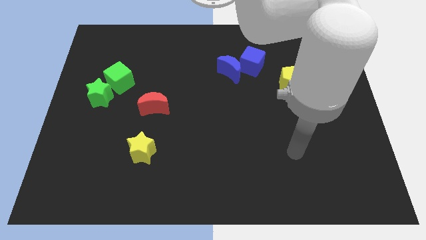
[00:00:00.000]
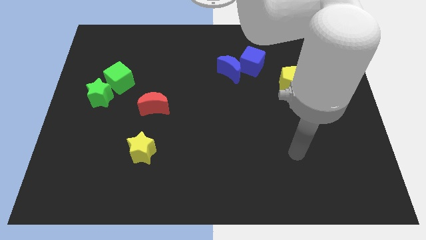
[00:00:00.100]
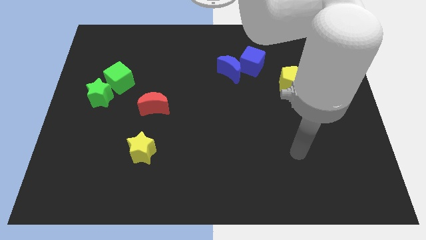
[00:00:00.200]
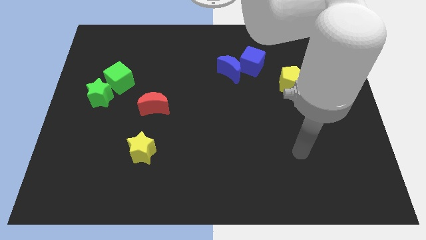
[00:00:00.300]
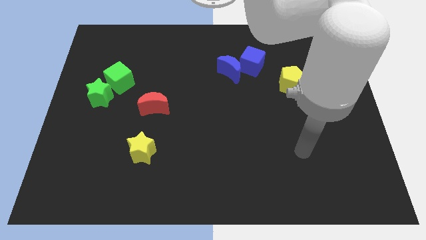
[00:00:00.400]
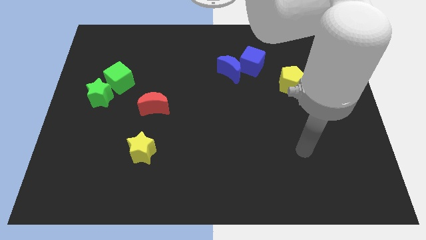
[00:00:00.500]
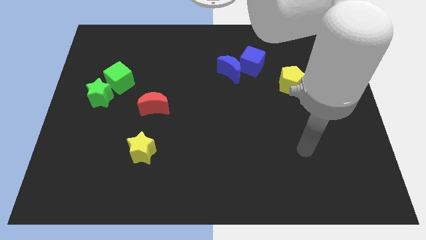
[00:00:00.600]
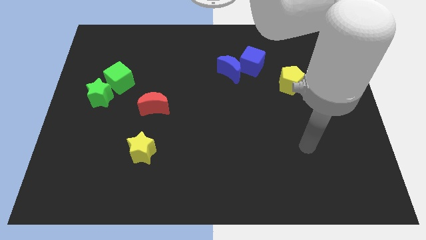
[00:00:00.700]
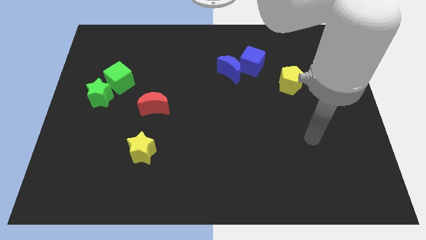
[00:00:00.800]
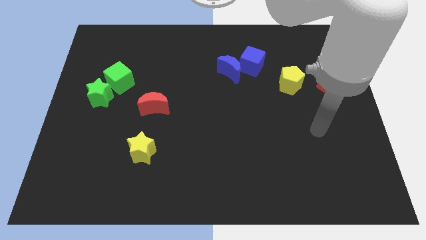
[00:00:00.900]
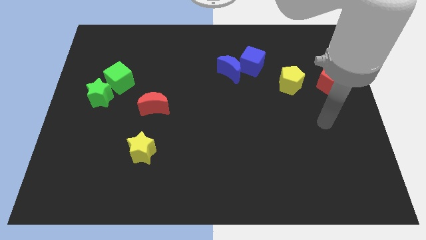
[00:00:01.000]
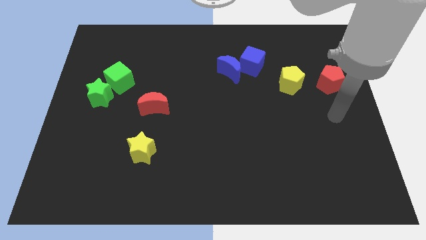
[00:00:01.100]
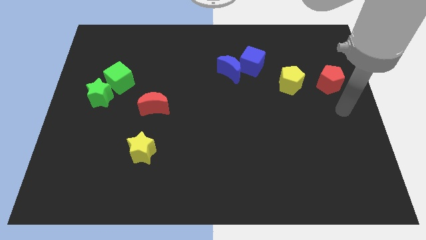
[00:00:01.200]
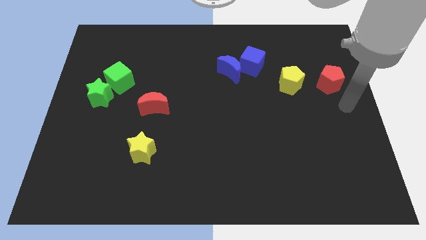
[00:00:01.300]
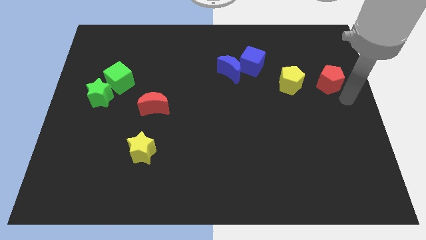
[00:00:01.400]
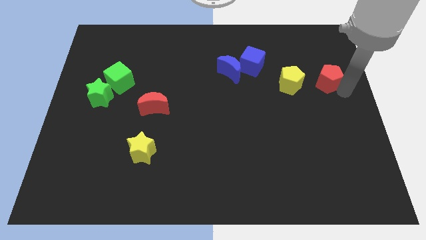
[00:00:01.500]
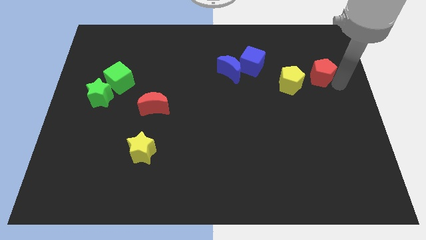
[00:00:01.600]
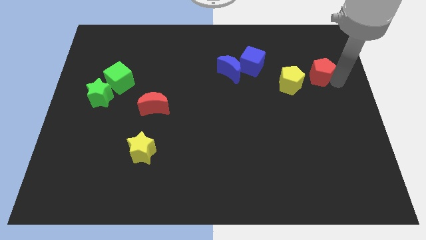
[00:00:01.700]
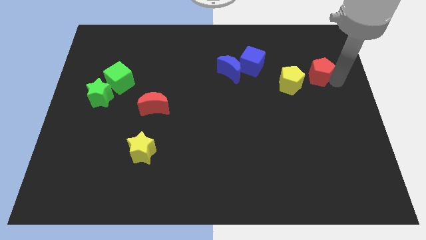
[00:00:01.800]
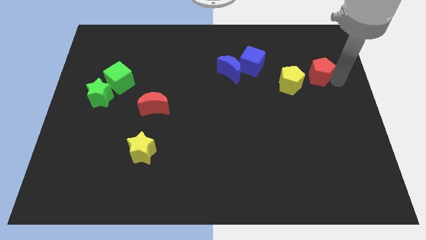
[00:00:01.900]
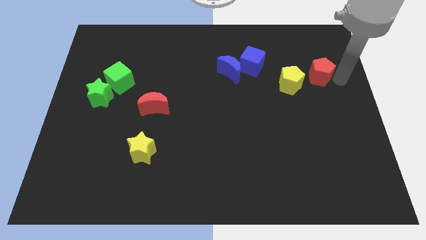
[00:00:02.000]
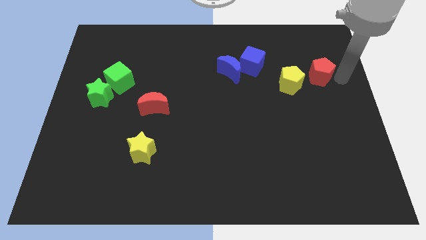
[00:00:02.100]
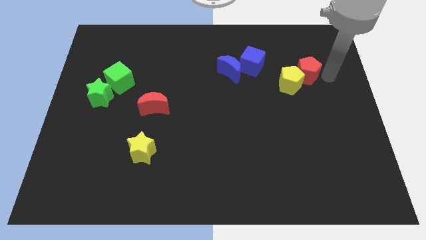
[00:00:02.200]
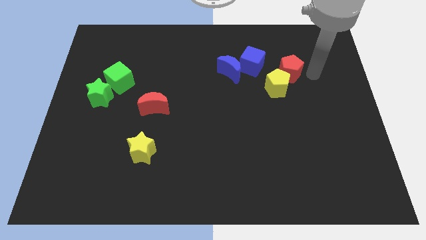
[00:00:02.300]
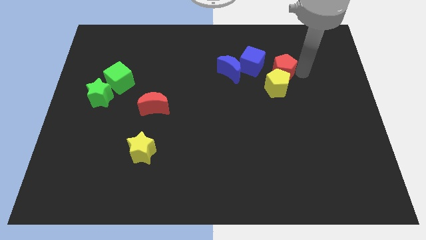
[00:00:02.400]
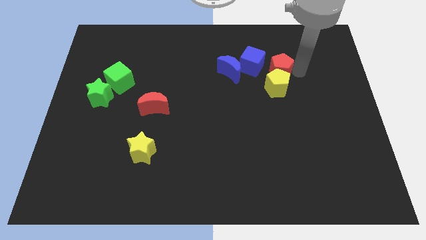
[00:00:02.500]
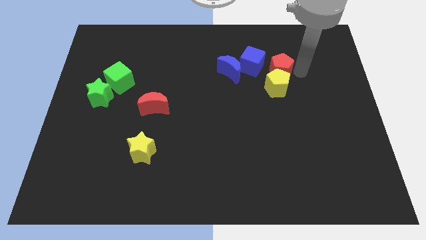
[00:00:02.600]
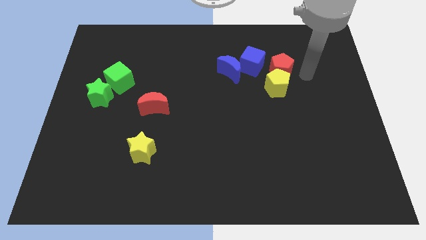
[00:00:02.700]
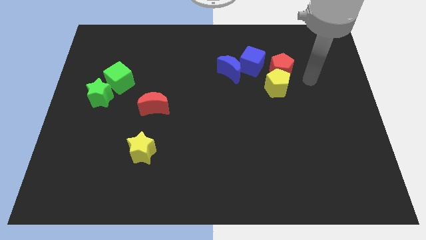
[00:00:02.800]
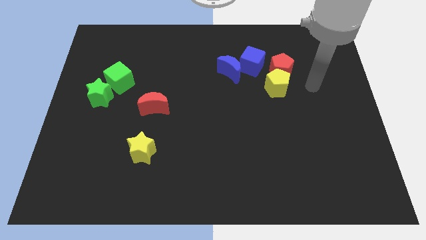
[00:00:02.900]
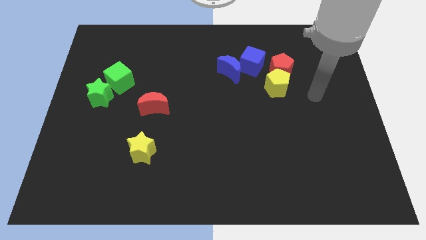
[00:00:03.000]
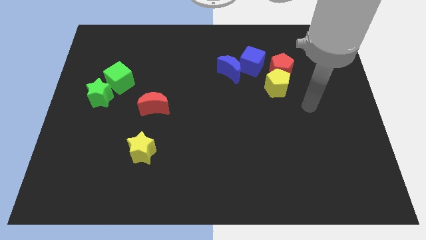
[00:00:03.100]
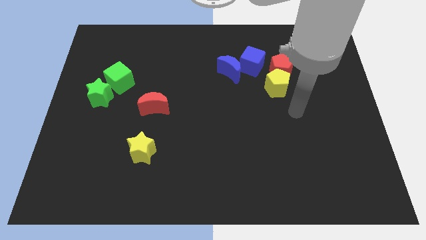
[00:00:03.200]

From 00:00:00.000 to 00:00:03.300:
put the red pentagon at the top of the yellow pentagon

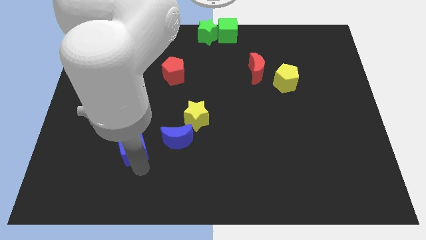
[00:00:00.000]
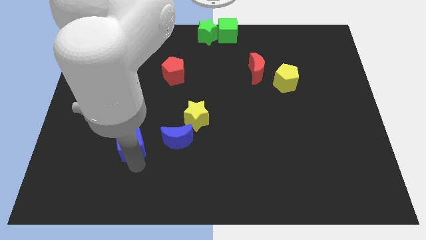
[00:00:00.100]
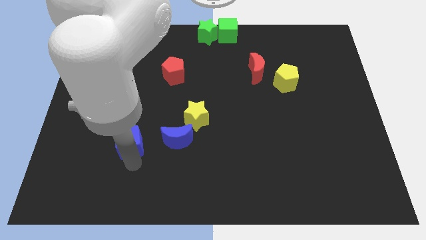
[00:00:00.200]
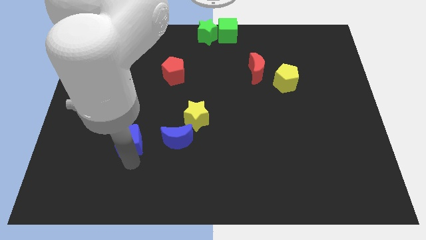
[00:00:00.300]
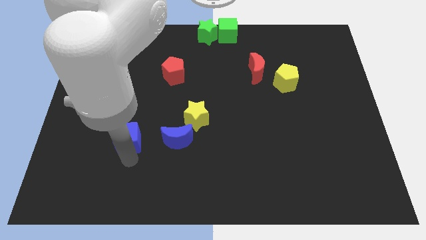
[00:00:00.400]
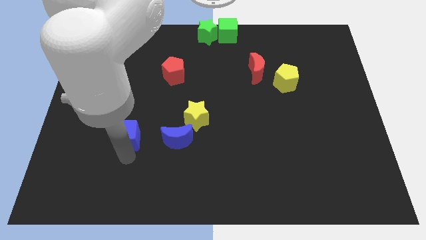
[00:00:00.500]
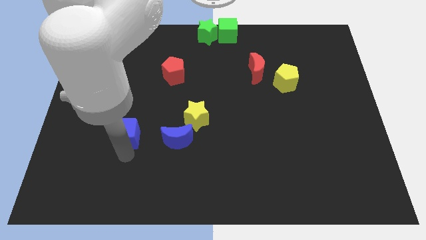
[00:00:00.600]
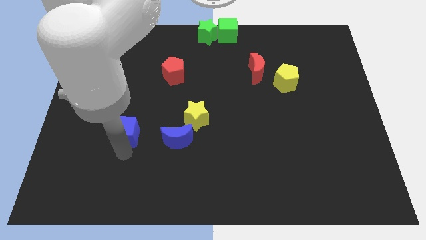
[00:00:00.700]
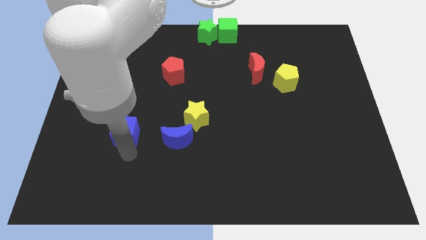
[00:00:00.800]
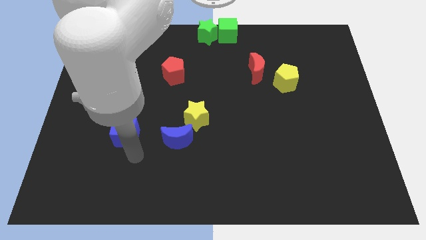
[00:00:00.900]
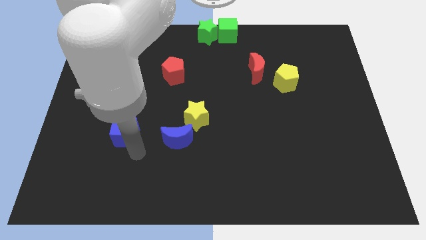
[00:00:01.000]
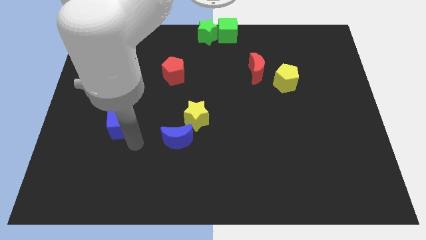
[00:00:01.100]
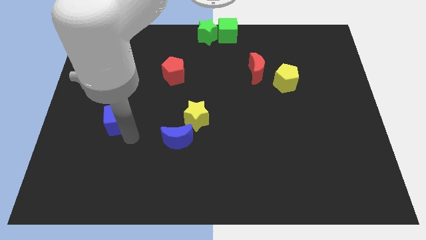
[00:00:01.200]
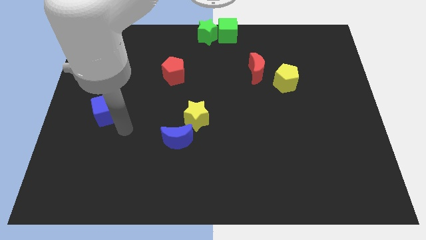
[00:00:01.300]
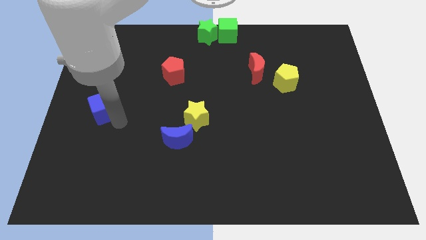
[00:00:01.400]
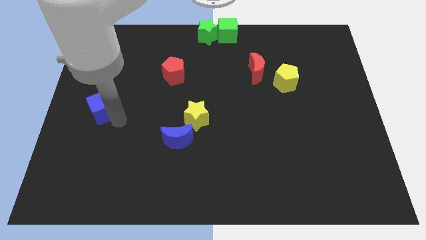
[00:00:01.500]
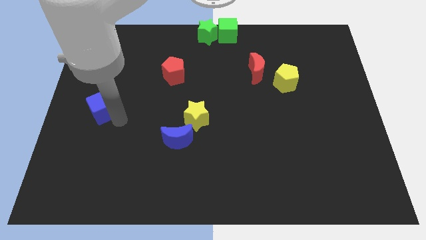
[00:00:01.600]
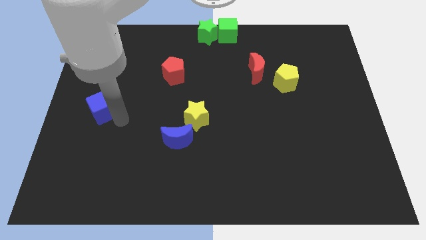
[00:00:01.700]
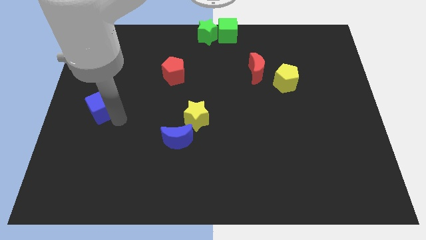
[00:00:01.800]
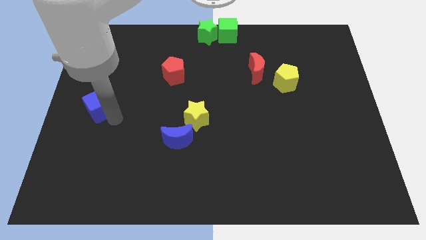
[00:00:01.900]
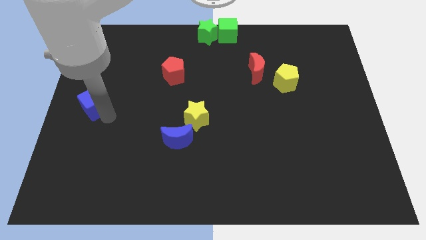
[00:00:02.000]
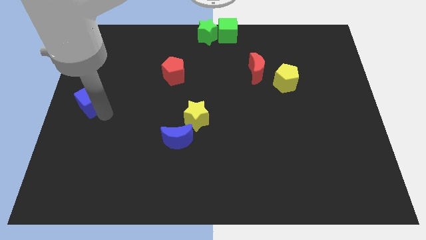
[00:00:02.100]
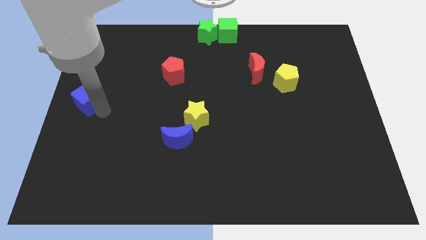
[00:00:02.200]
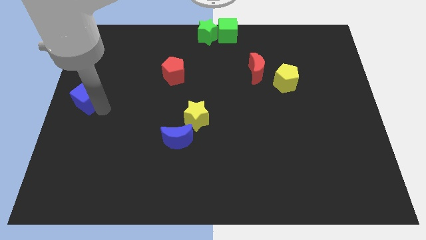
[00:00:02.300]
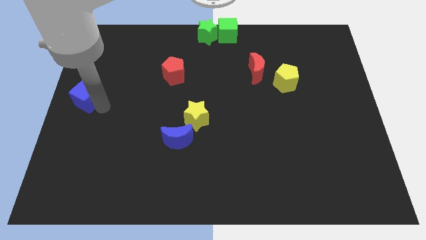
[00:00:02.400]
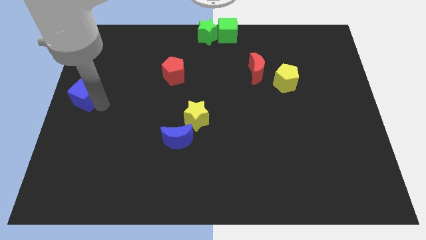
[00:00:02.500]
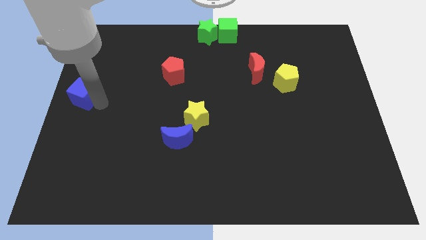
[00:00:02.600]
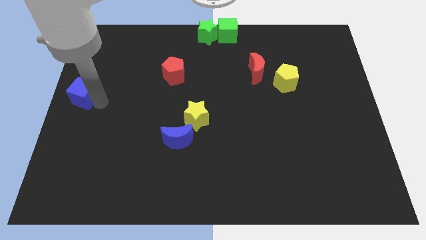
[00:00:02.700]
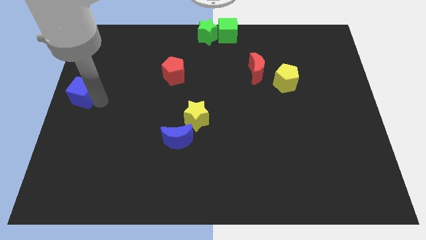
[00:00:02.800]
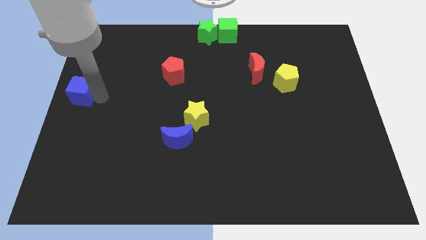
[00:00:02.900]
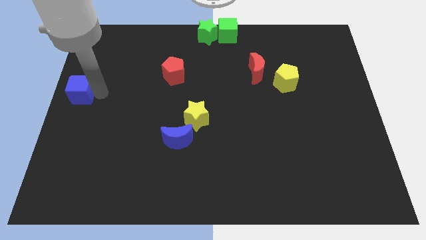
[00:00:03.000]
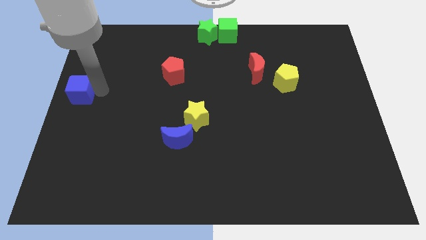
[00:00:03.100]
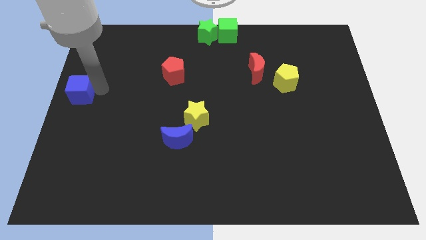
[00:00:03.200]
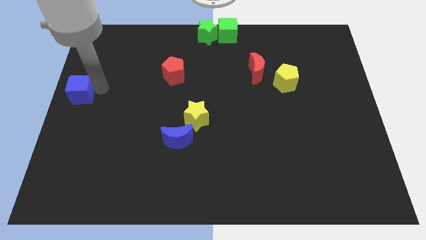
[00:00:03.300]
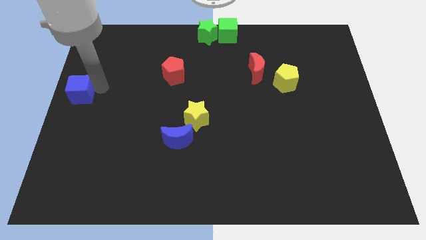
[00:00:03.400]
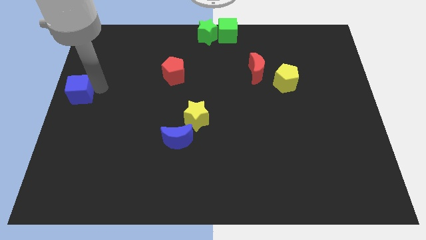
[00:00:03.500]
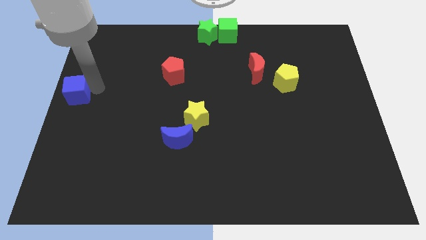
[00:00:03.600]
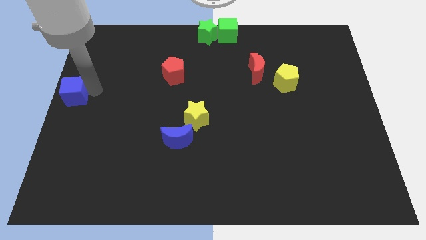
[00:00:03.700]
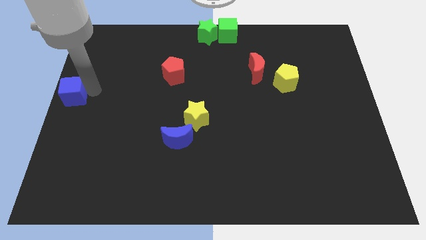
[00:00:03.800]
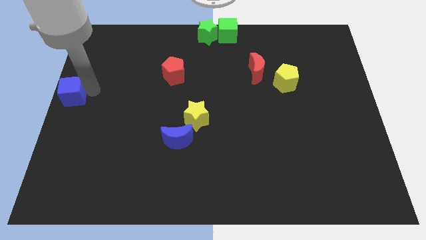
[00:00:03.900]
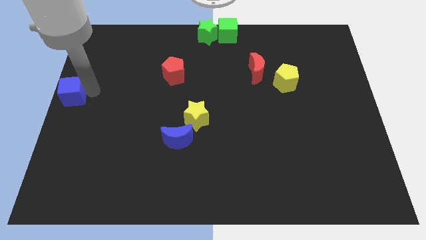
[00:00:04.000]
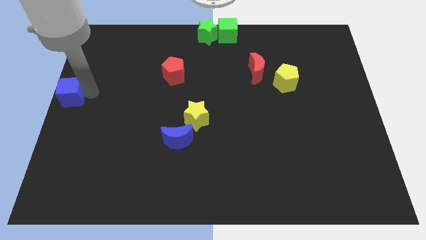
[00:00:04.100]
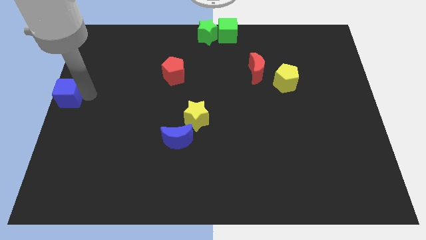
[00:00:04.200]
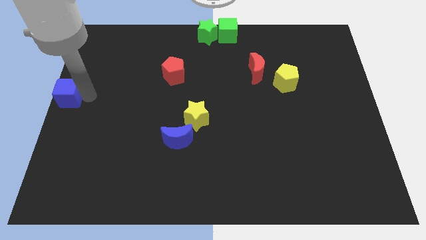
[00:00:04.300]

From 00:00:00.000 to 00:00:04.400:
place the blue cube at the center left side of the board

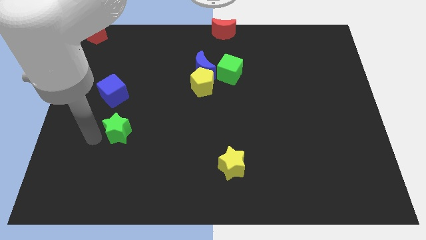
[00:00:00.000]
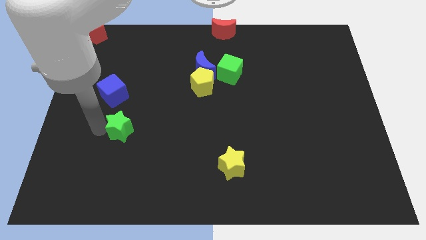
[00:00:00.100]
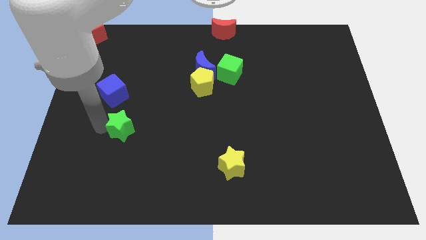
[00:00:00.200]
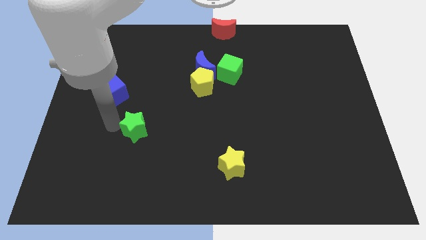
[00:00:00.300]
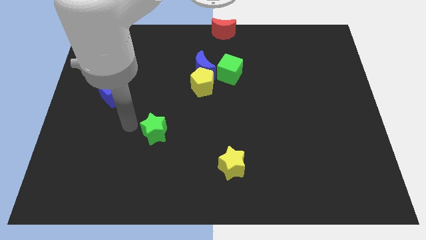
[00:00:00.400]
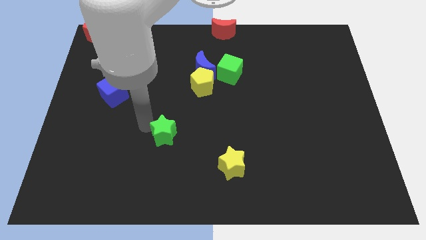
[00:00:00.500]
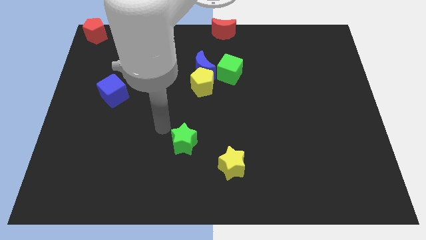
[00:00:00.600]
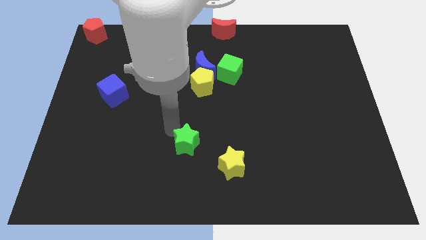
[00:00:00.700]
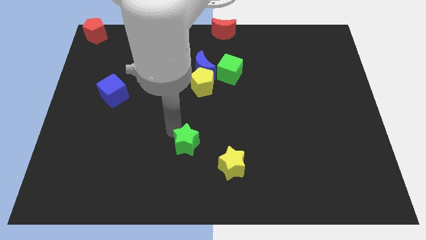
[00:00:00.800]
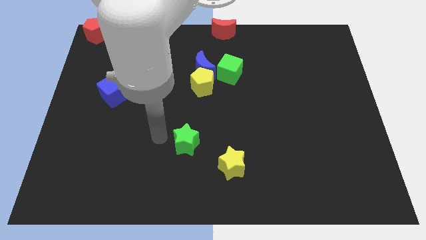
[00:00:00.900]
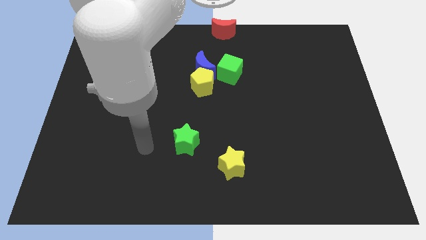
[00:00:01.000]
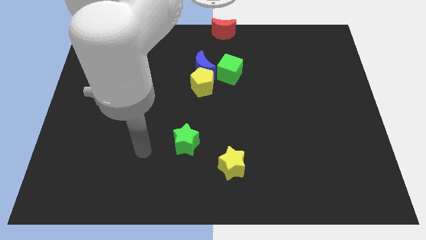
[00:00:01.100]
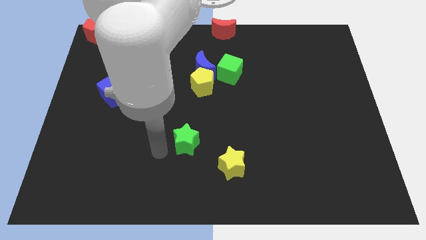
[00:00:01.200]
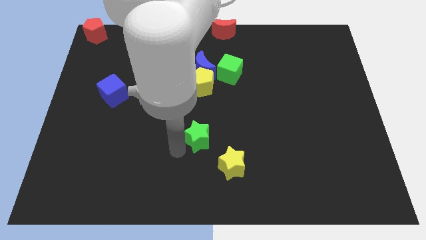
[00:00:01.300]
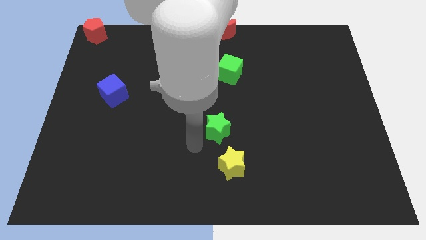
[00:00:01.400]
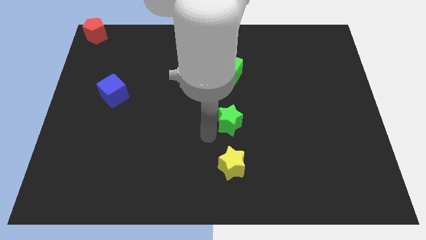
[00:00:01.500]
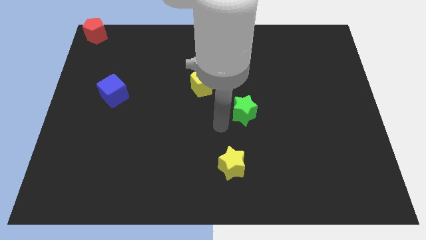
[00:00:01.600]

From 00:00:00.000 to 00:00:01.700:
move the green star parallel to the yellow star
